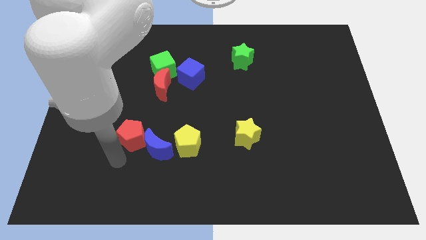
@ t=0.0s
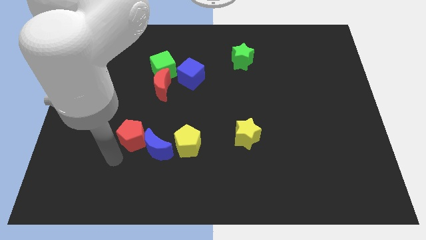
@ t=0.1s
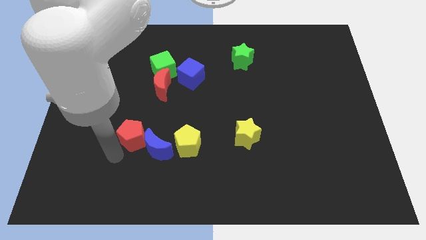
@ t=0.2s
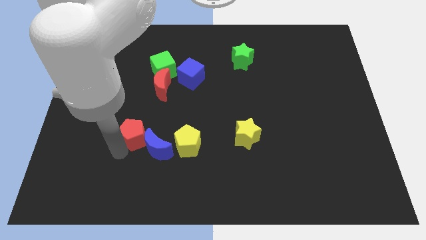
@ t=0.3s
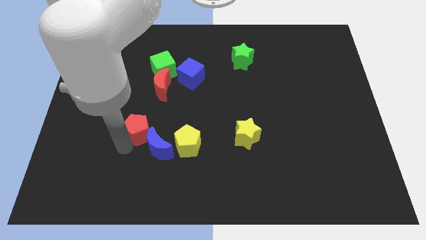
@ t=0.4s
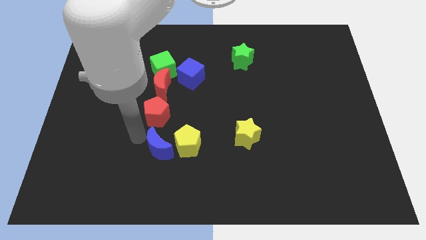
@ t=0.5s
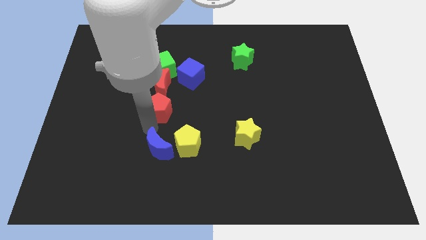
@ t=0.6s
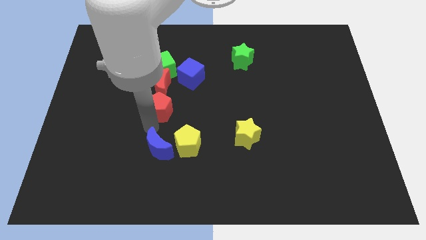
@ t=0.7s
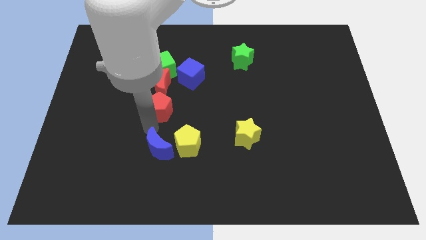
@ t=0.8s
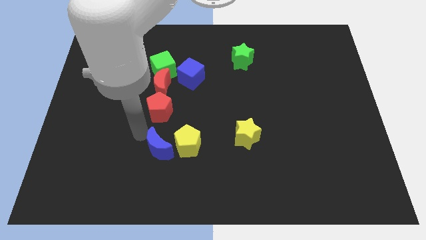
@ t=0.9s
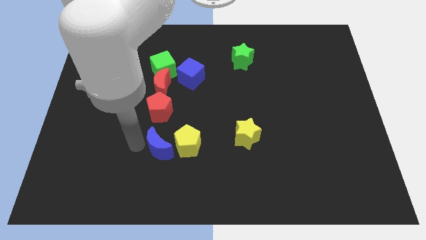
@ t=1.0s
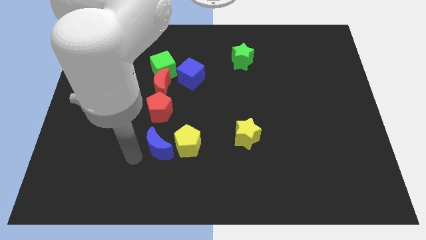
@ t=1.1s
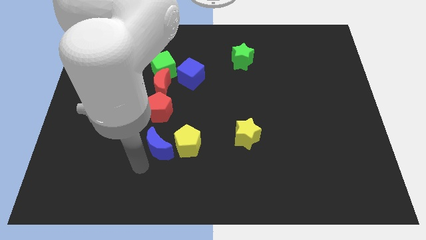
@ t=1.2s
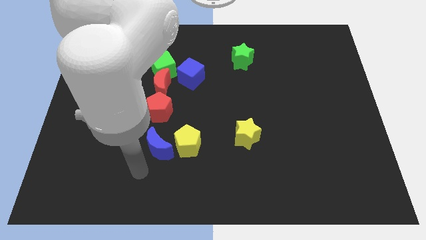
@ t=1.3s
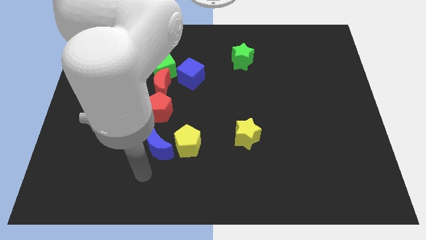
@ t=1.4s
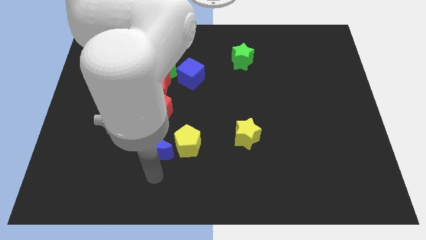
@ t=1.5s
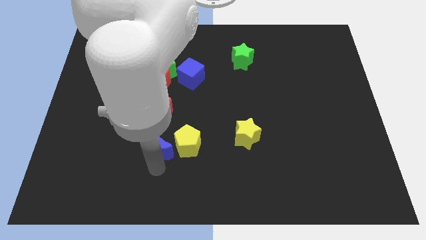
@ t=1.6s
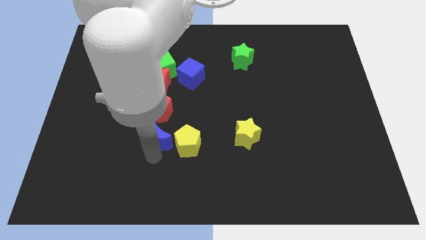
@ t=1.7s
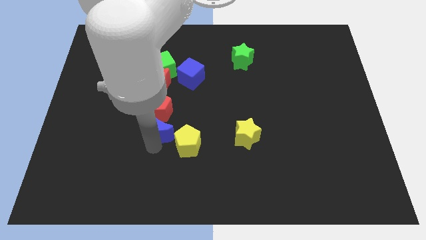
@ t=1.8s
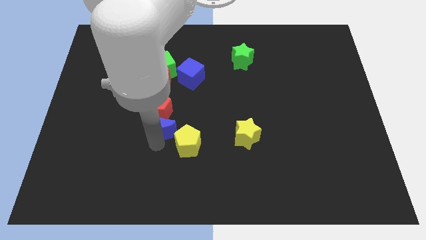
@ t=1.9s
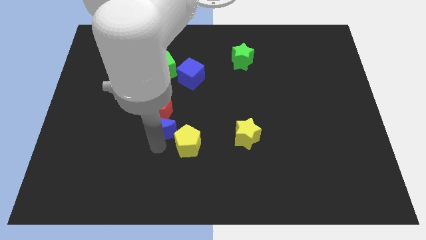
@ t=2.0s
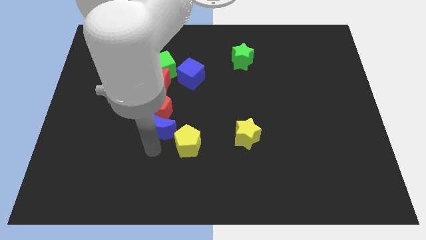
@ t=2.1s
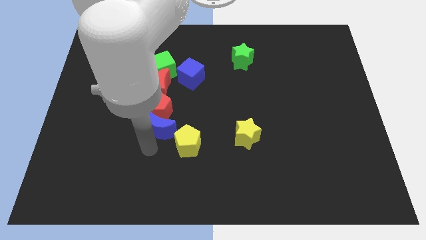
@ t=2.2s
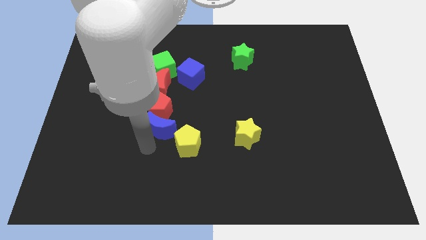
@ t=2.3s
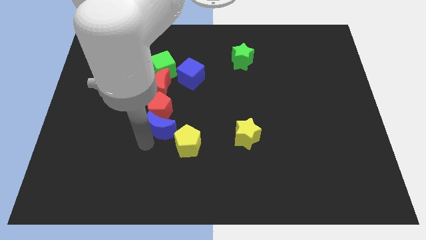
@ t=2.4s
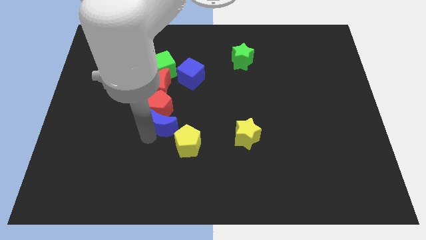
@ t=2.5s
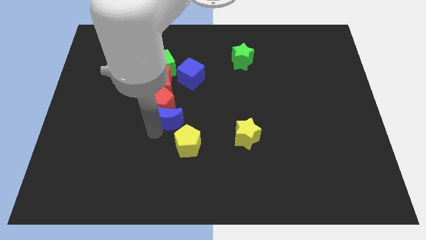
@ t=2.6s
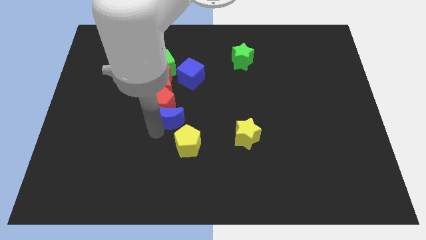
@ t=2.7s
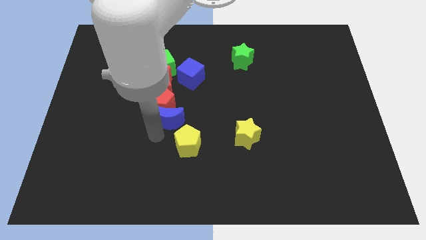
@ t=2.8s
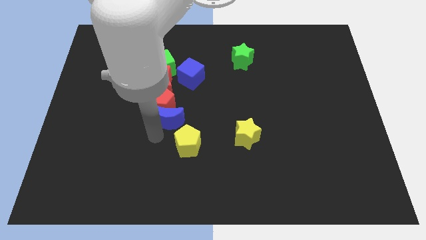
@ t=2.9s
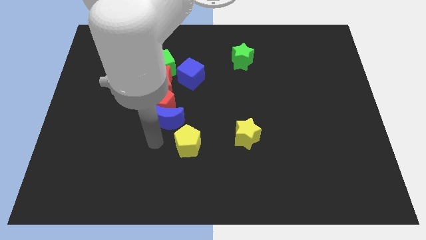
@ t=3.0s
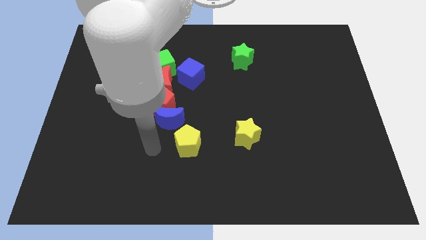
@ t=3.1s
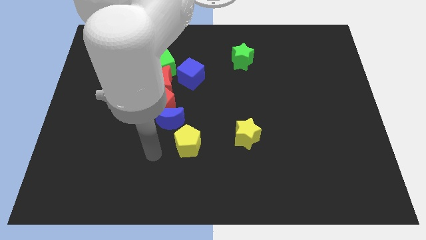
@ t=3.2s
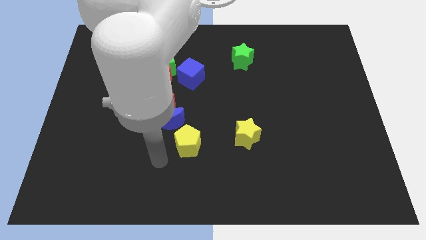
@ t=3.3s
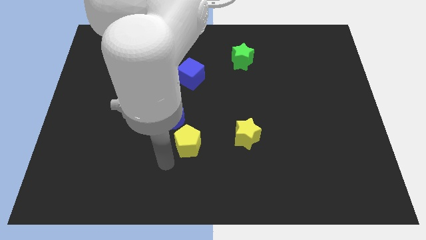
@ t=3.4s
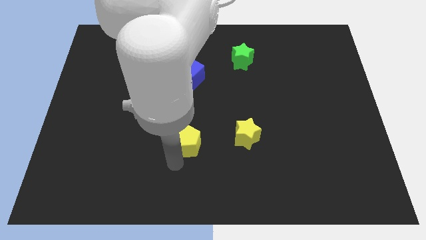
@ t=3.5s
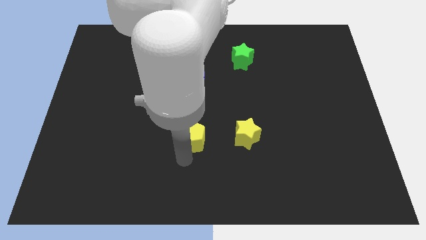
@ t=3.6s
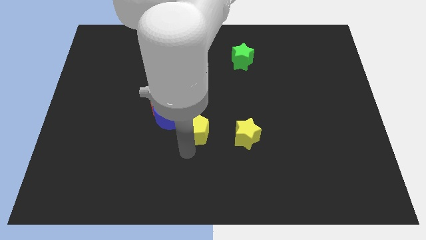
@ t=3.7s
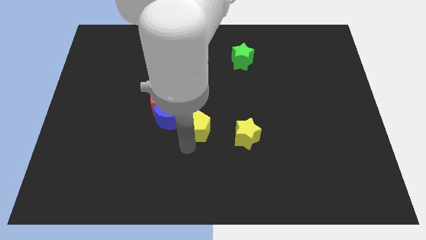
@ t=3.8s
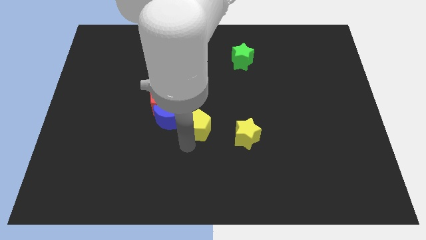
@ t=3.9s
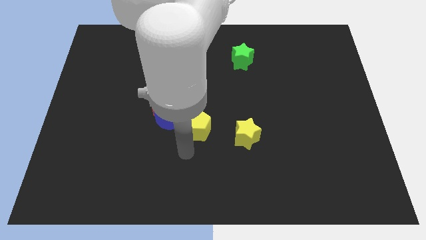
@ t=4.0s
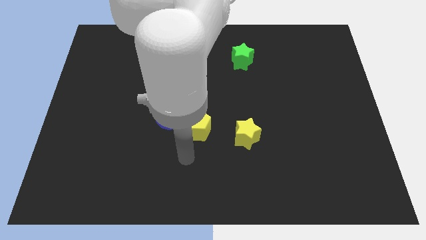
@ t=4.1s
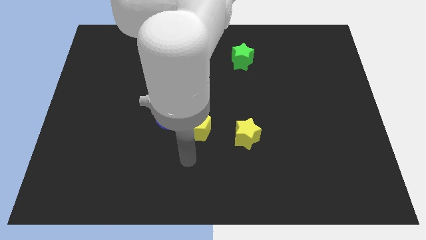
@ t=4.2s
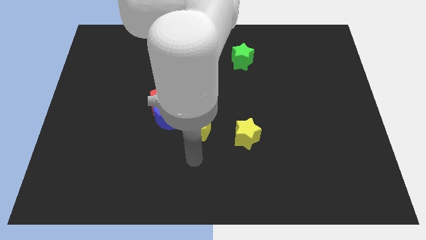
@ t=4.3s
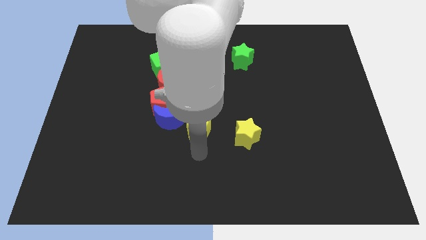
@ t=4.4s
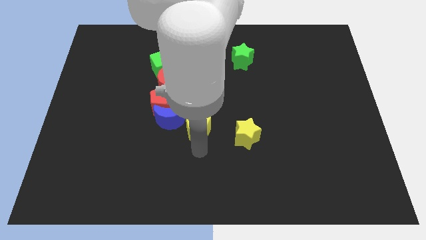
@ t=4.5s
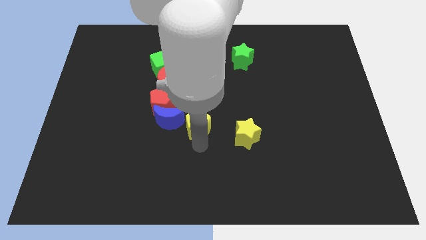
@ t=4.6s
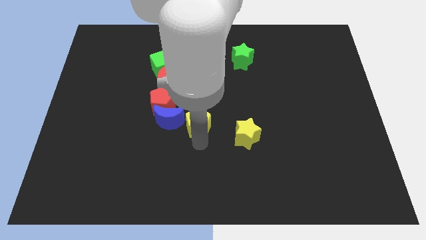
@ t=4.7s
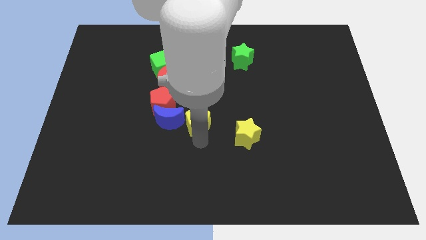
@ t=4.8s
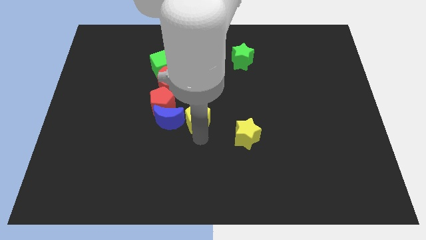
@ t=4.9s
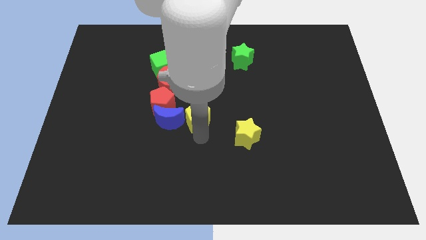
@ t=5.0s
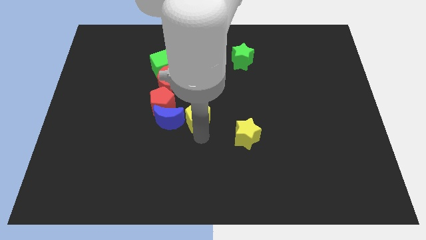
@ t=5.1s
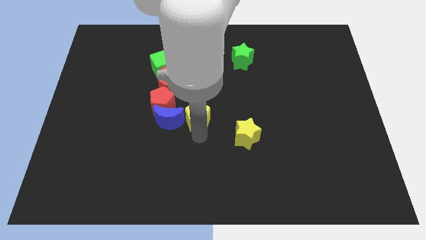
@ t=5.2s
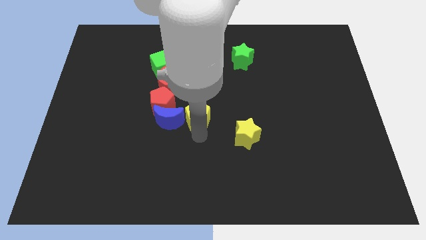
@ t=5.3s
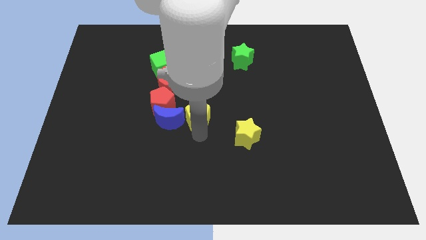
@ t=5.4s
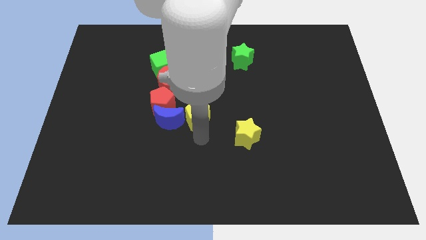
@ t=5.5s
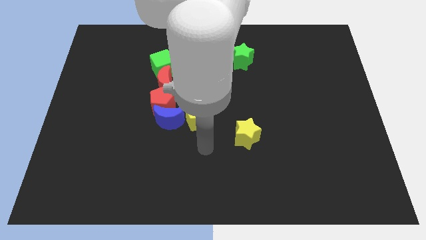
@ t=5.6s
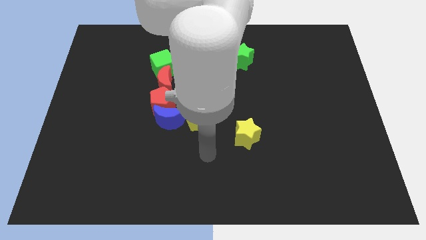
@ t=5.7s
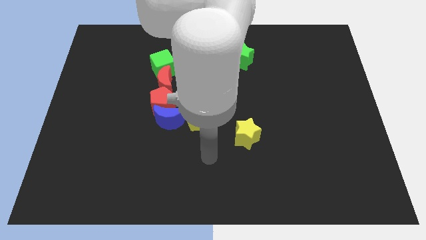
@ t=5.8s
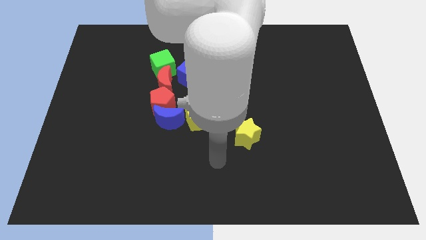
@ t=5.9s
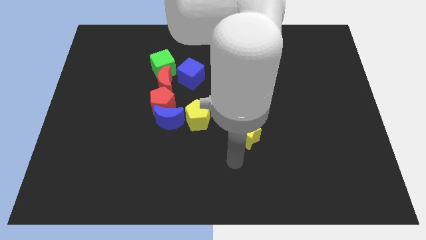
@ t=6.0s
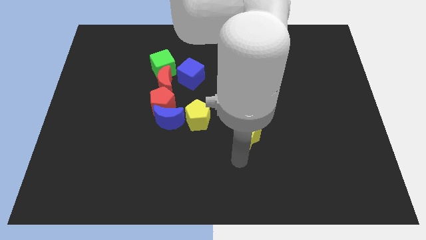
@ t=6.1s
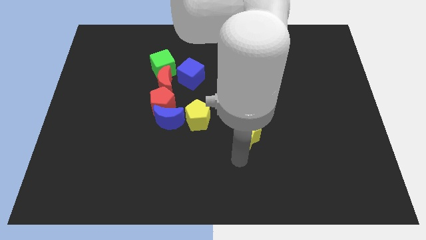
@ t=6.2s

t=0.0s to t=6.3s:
move the group of blocks to the center of the board

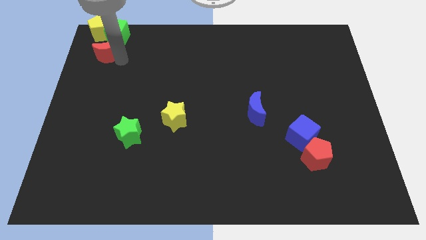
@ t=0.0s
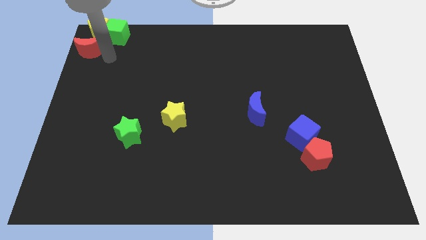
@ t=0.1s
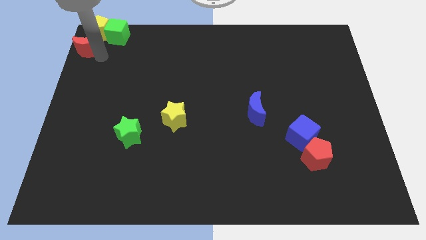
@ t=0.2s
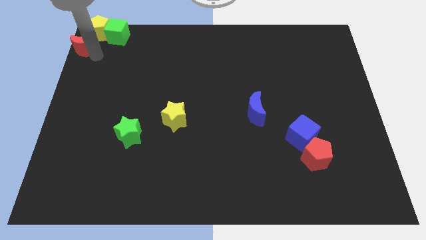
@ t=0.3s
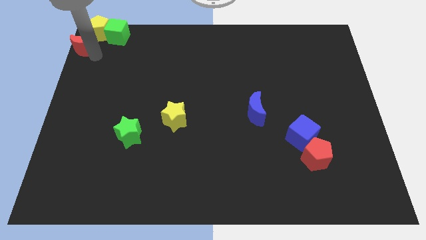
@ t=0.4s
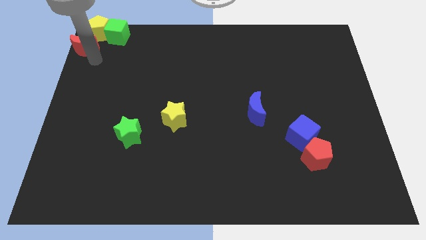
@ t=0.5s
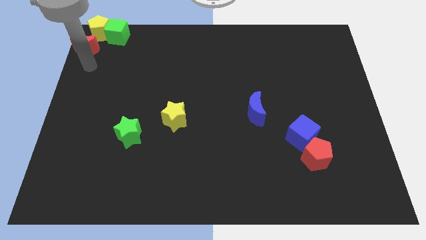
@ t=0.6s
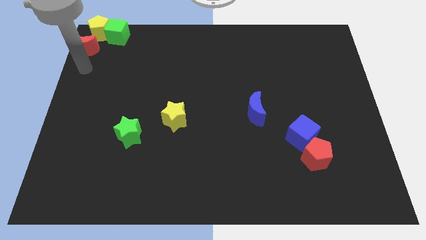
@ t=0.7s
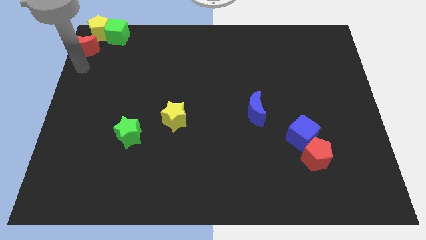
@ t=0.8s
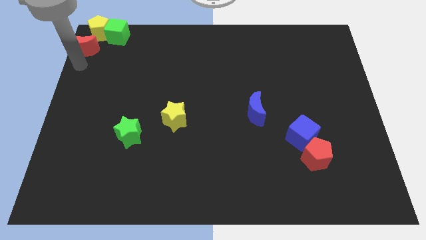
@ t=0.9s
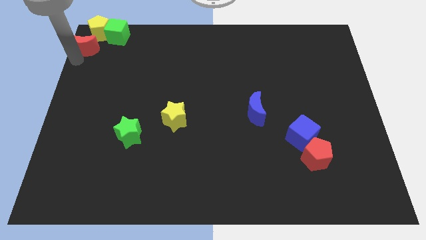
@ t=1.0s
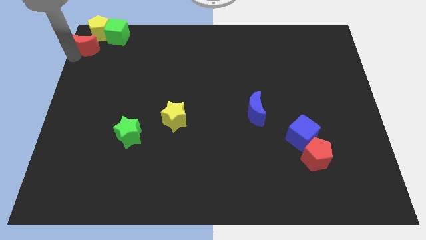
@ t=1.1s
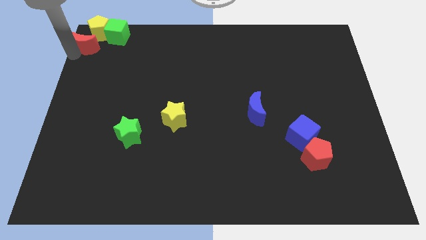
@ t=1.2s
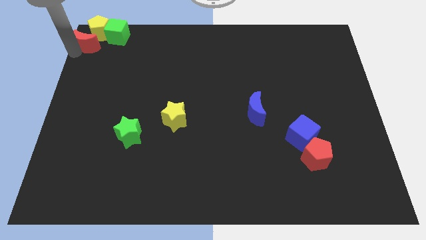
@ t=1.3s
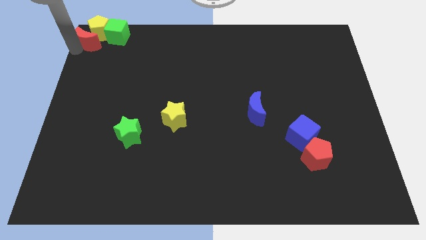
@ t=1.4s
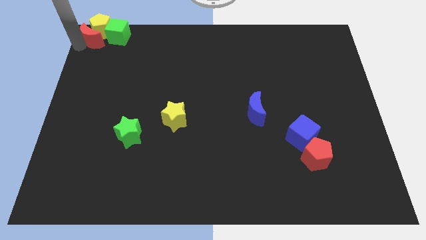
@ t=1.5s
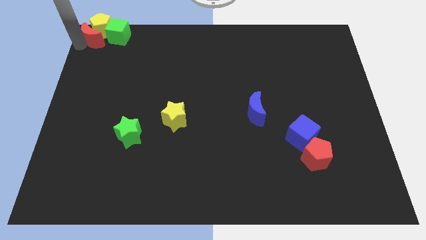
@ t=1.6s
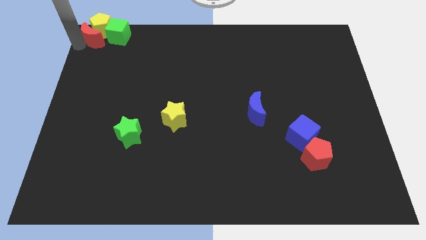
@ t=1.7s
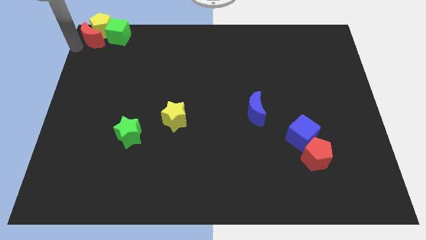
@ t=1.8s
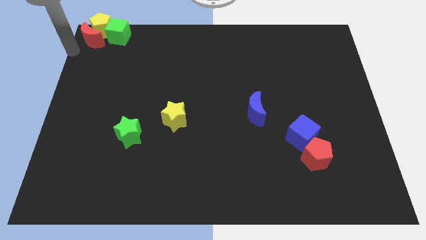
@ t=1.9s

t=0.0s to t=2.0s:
move the red crescent towards the top left corner of the board

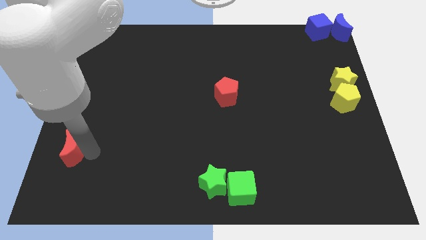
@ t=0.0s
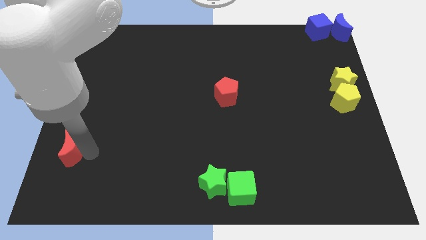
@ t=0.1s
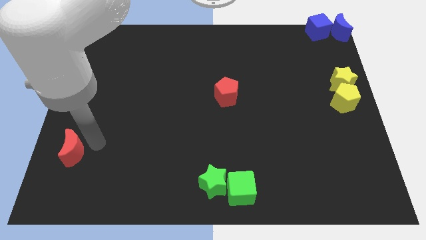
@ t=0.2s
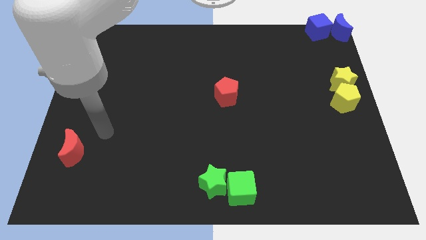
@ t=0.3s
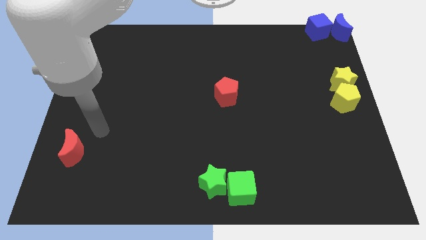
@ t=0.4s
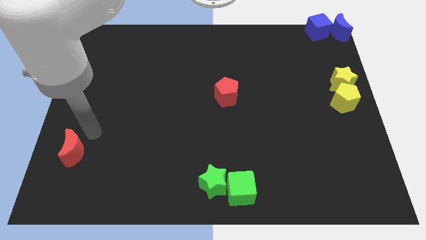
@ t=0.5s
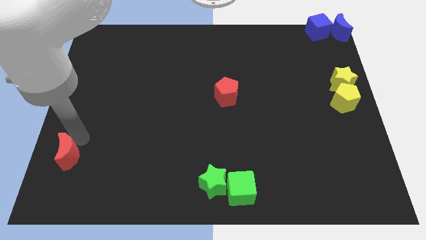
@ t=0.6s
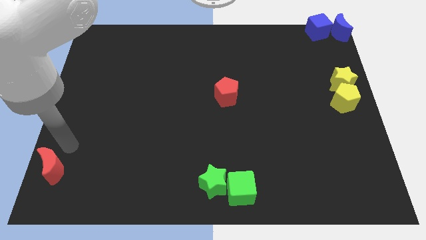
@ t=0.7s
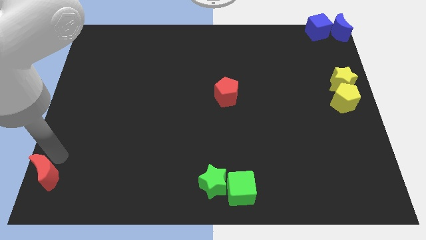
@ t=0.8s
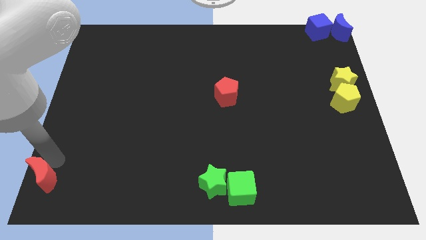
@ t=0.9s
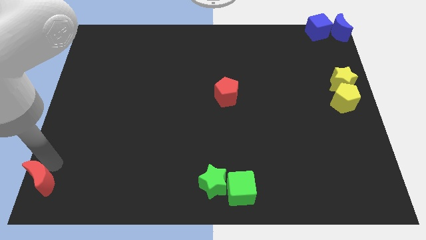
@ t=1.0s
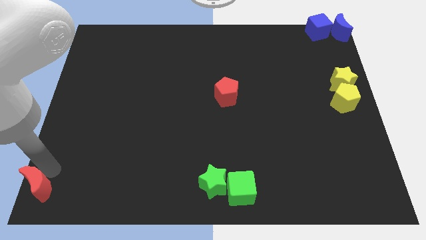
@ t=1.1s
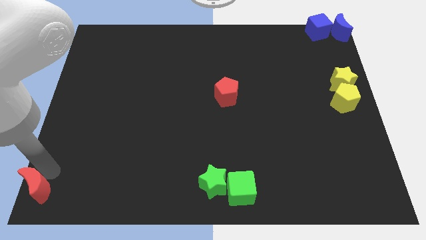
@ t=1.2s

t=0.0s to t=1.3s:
place red crescent towards bottom left corner
